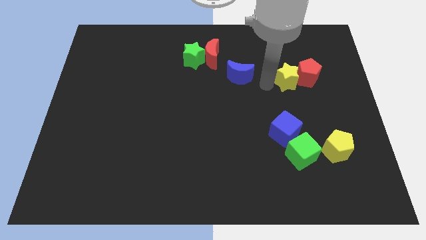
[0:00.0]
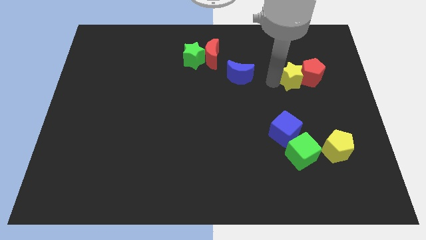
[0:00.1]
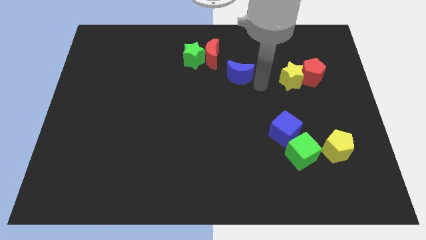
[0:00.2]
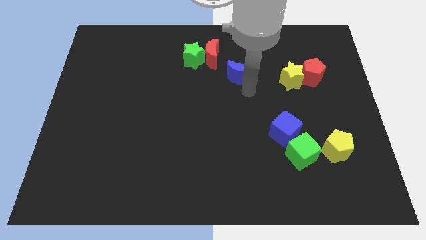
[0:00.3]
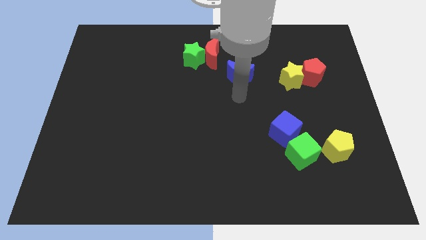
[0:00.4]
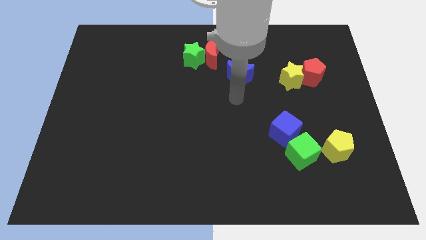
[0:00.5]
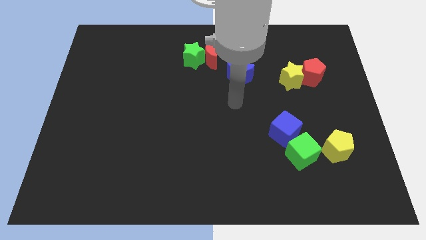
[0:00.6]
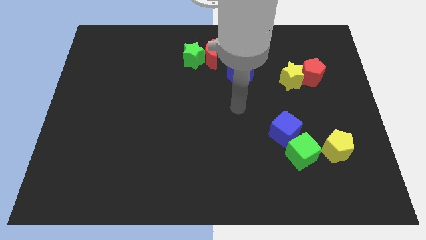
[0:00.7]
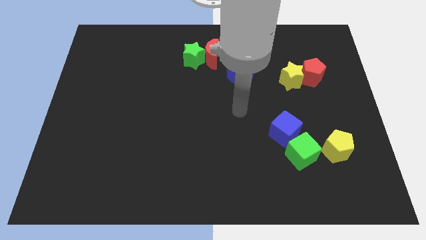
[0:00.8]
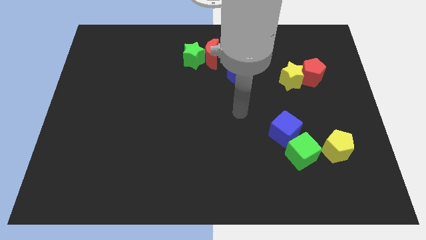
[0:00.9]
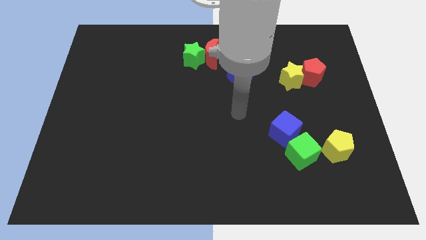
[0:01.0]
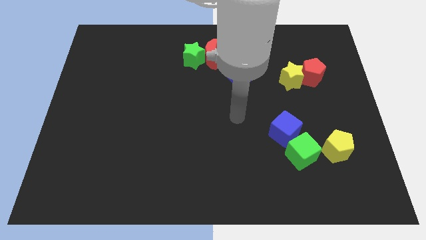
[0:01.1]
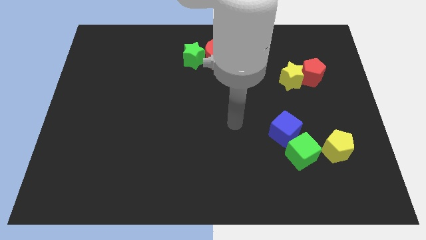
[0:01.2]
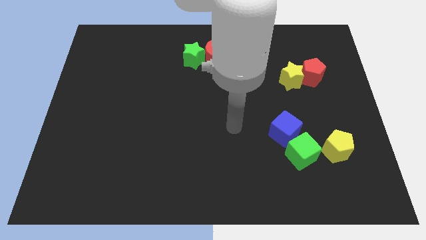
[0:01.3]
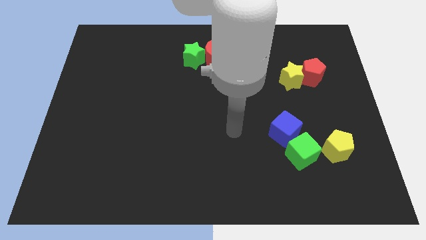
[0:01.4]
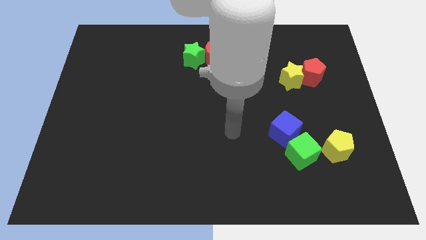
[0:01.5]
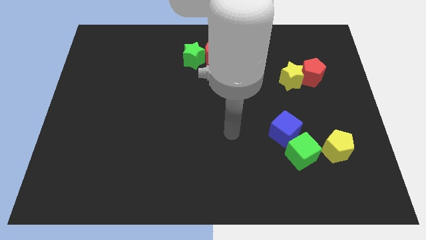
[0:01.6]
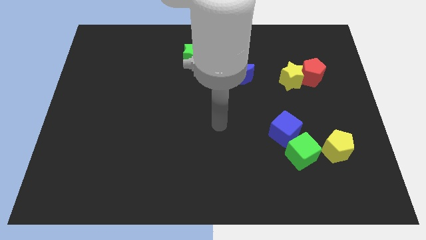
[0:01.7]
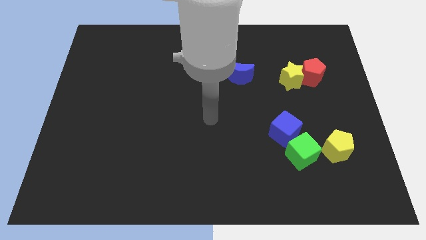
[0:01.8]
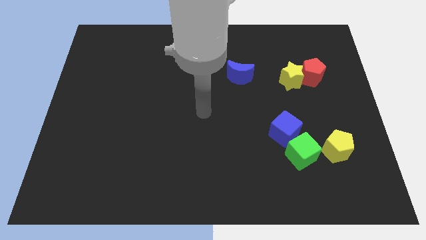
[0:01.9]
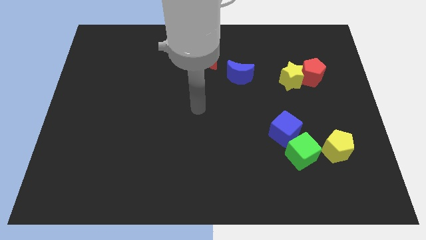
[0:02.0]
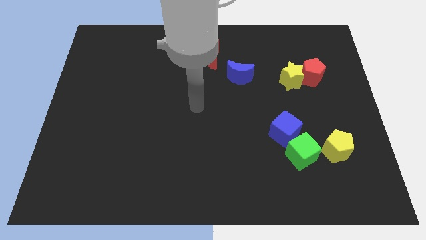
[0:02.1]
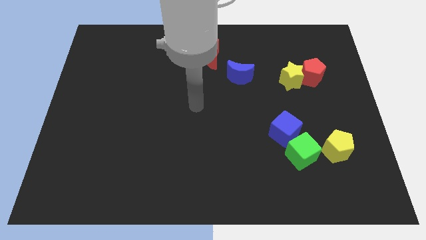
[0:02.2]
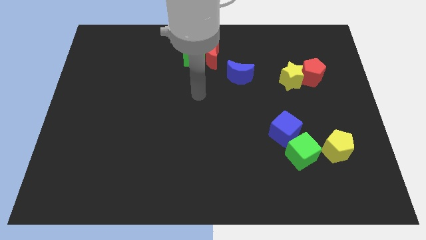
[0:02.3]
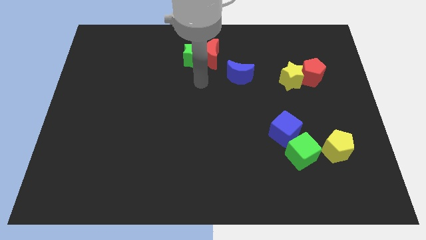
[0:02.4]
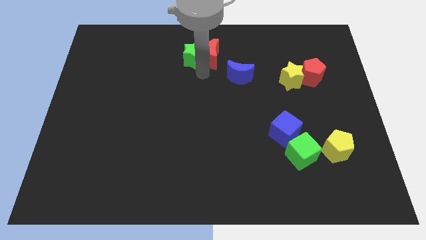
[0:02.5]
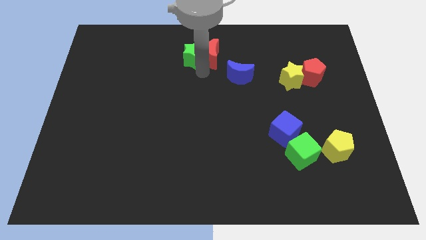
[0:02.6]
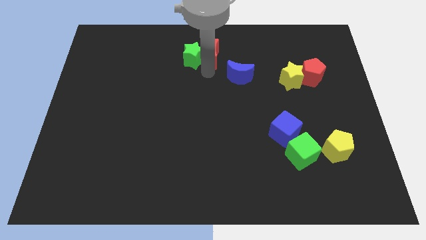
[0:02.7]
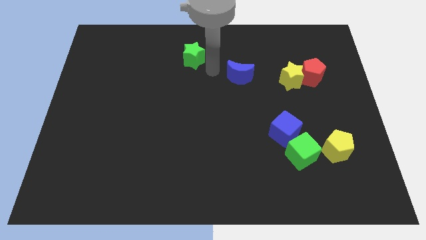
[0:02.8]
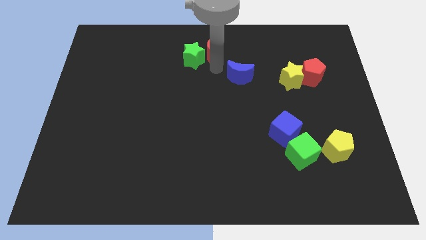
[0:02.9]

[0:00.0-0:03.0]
move arm away from the yellow star

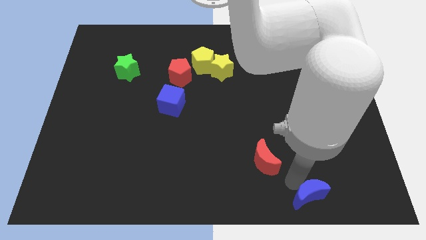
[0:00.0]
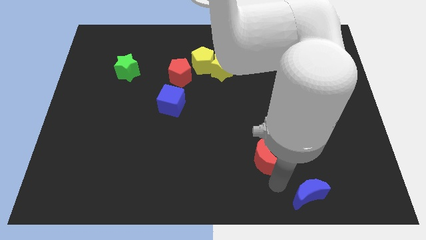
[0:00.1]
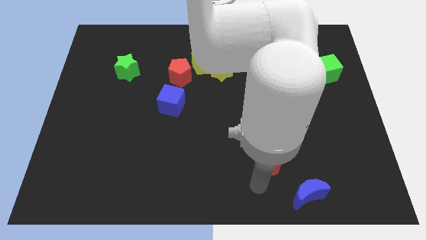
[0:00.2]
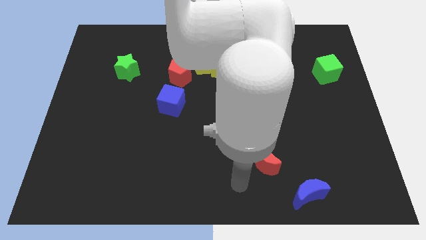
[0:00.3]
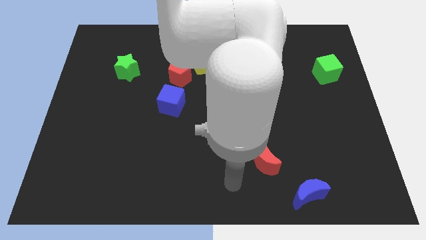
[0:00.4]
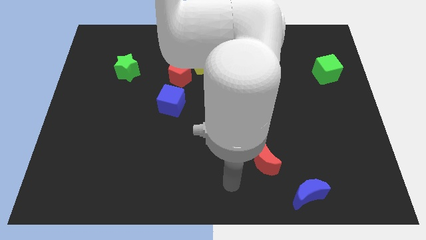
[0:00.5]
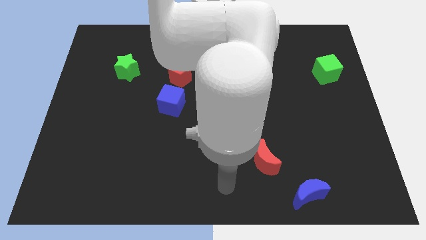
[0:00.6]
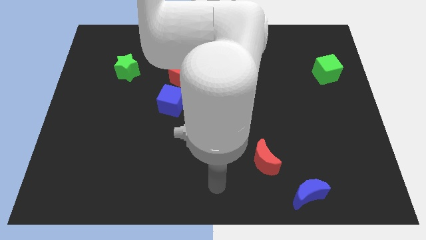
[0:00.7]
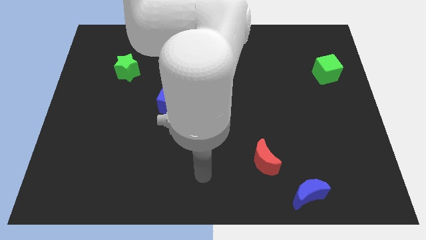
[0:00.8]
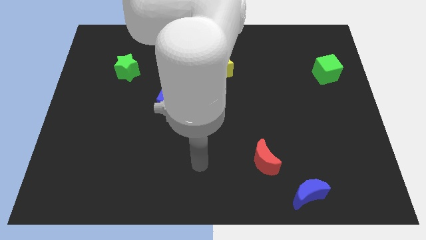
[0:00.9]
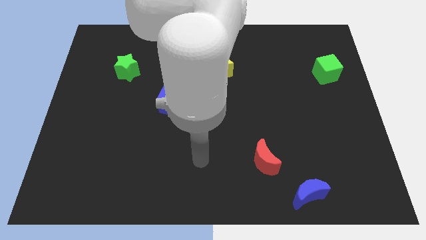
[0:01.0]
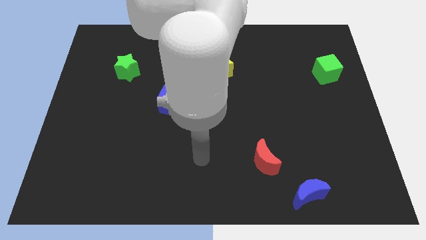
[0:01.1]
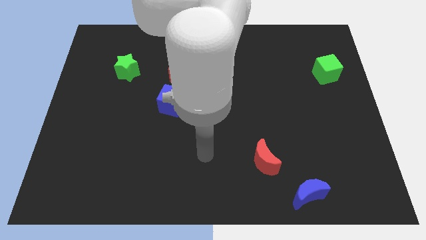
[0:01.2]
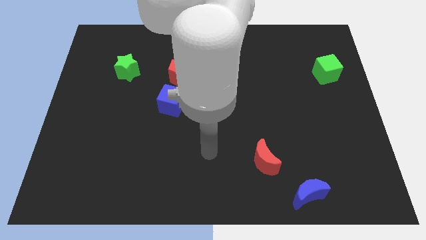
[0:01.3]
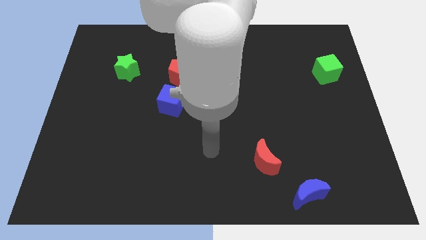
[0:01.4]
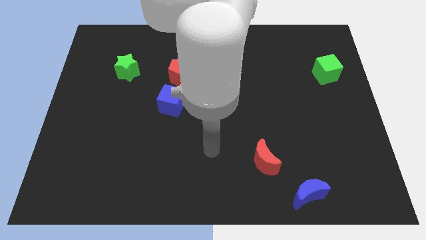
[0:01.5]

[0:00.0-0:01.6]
move the arm away from the blue moon

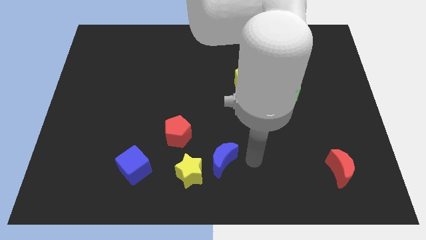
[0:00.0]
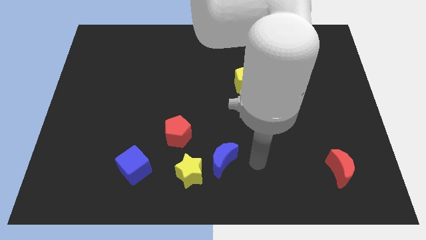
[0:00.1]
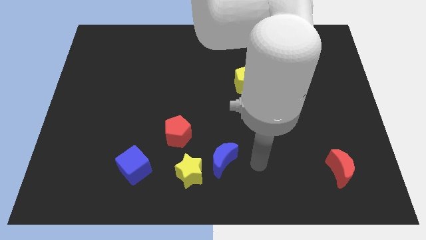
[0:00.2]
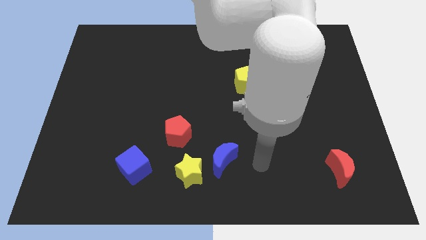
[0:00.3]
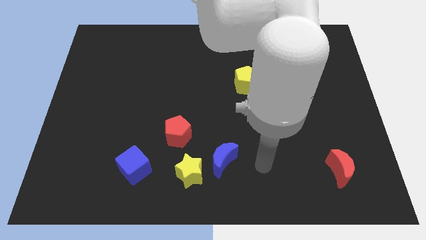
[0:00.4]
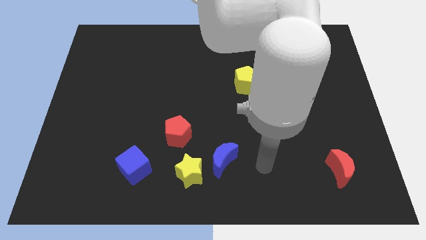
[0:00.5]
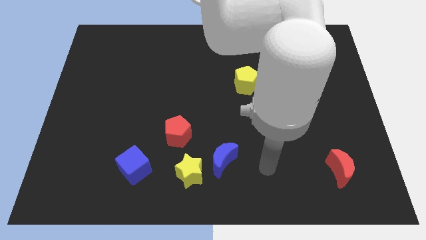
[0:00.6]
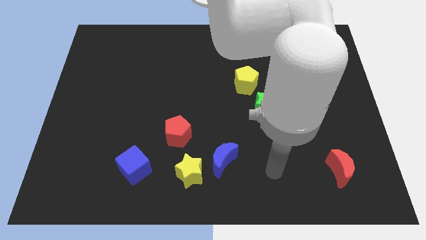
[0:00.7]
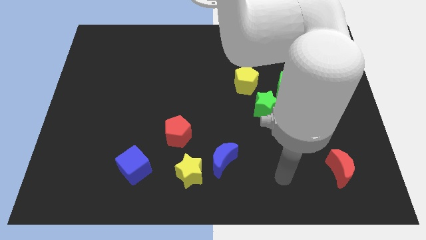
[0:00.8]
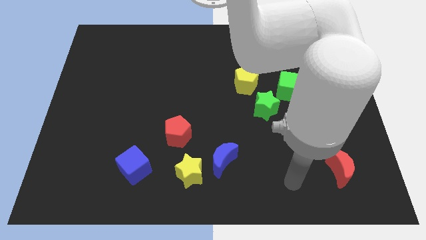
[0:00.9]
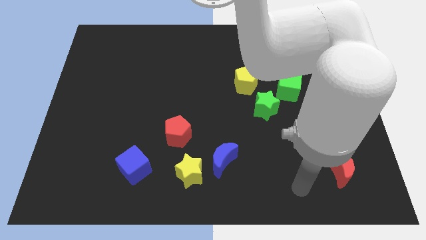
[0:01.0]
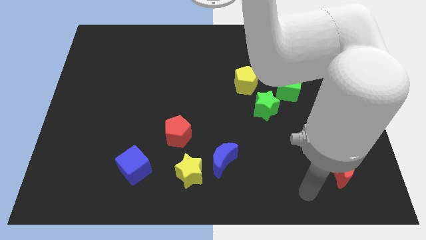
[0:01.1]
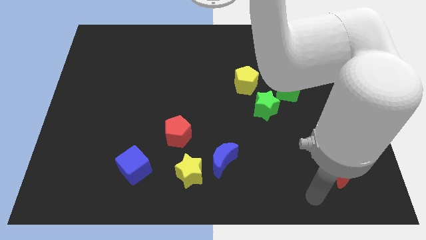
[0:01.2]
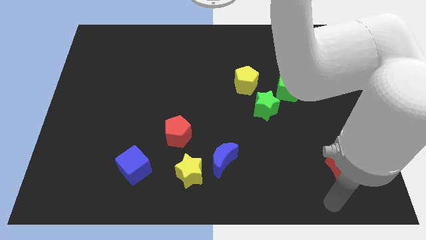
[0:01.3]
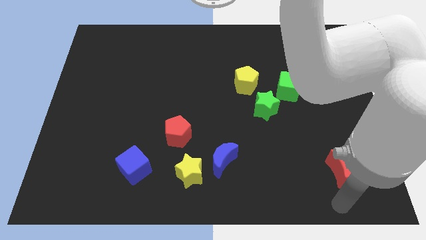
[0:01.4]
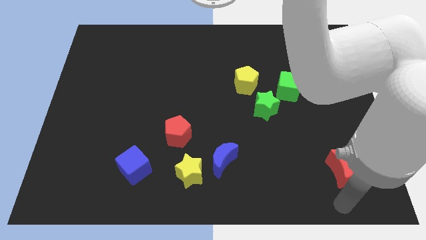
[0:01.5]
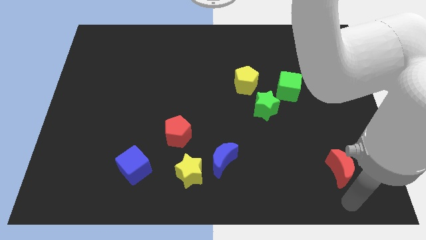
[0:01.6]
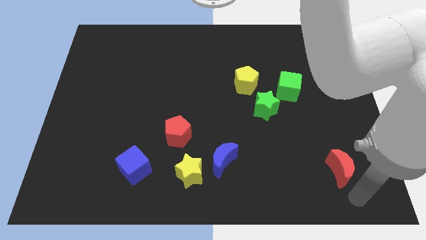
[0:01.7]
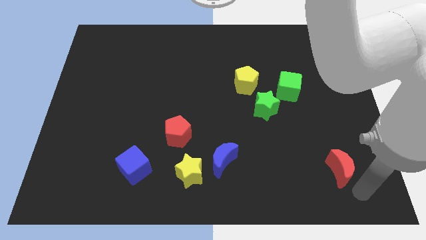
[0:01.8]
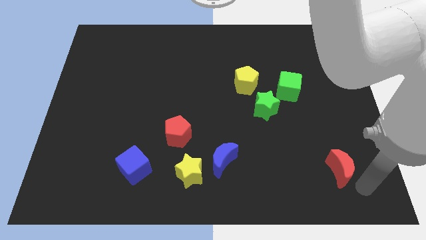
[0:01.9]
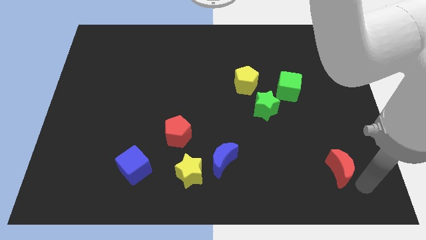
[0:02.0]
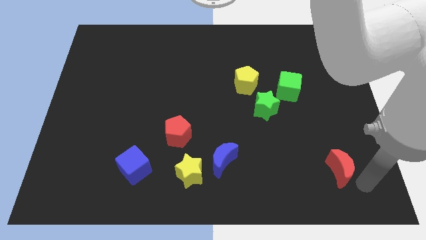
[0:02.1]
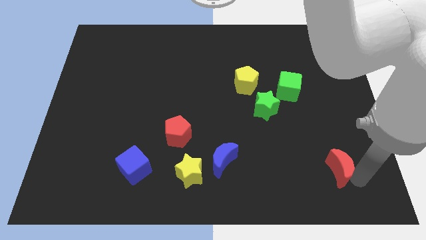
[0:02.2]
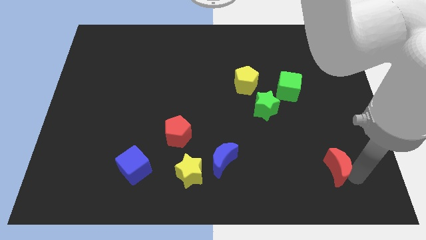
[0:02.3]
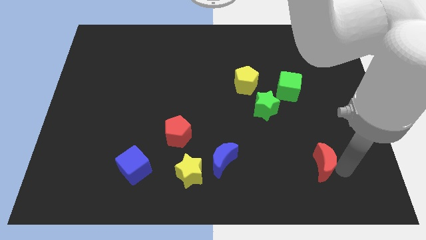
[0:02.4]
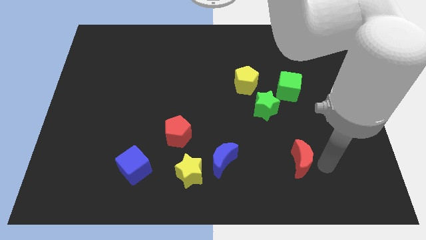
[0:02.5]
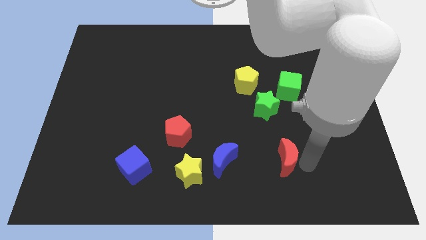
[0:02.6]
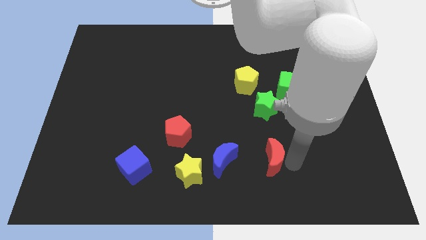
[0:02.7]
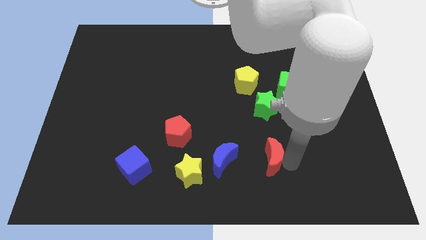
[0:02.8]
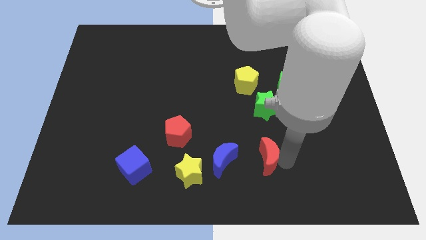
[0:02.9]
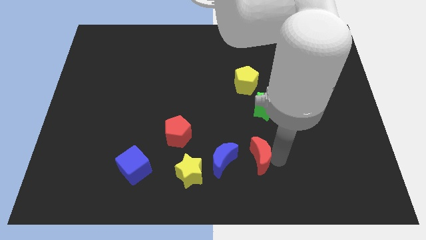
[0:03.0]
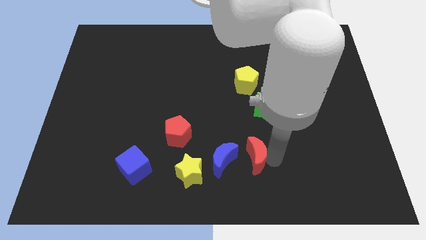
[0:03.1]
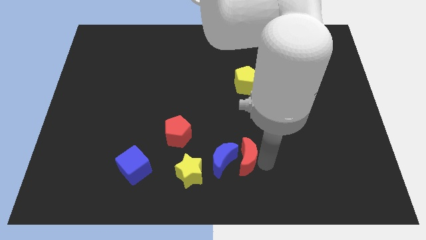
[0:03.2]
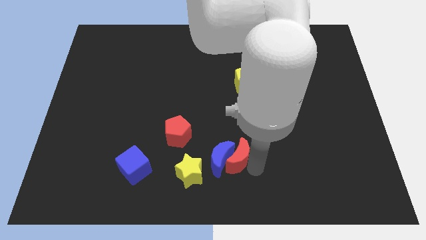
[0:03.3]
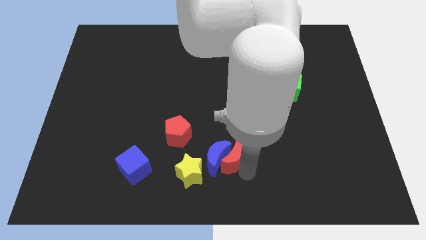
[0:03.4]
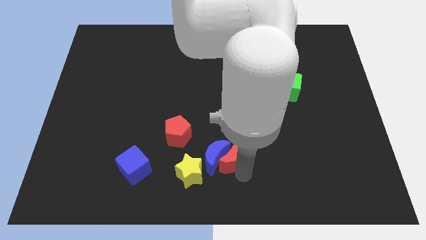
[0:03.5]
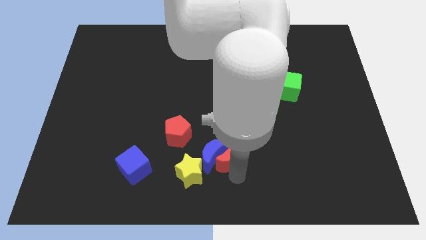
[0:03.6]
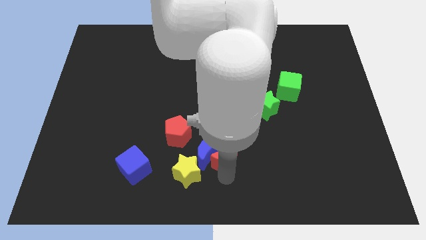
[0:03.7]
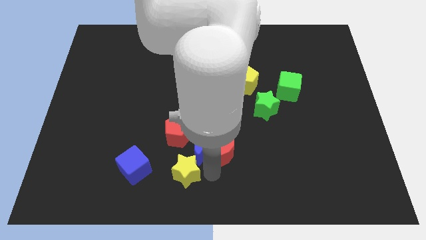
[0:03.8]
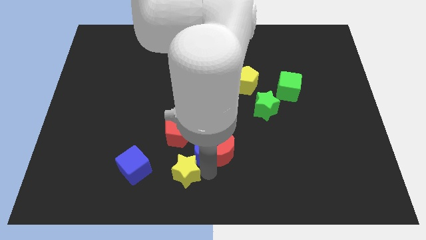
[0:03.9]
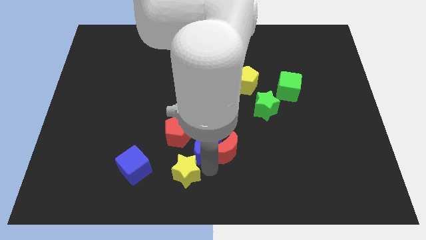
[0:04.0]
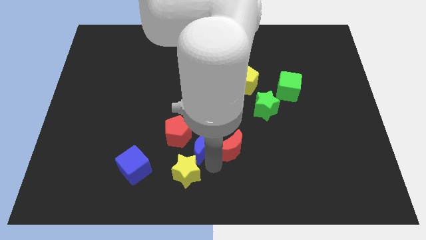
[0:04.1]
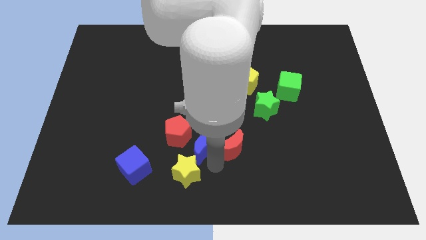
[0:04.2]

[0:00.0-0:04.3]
push the red and blue moons towards the yellow star
